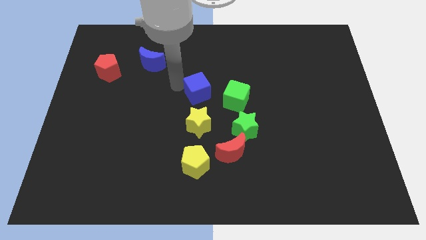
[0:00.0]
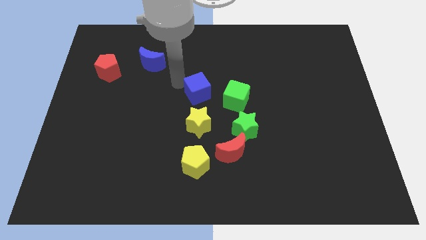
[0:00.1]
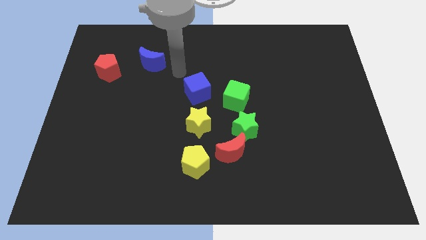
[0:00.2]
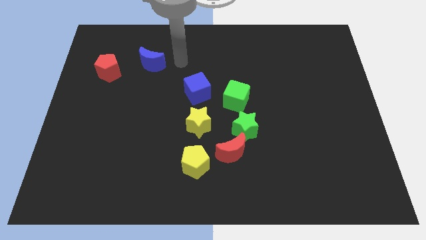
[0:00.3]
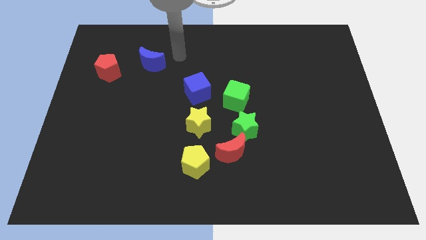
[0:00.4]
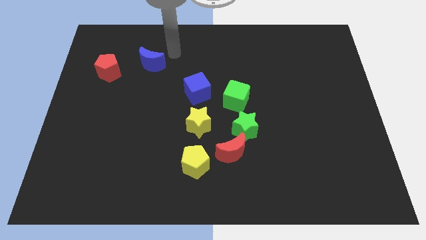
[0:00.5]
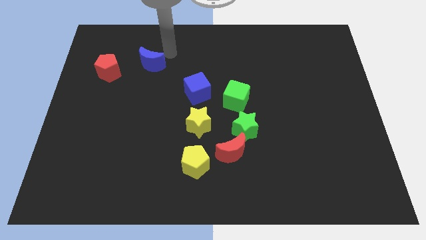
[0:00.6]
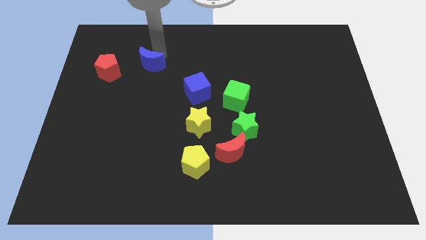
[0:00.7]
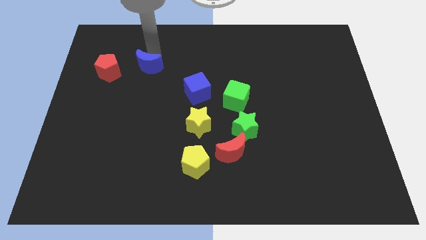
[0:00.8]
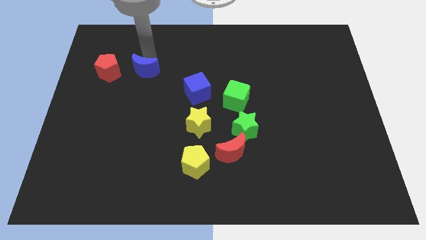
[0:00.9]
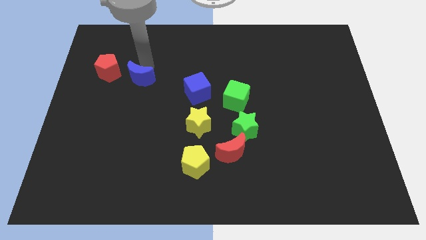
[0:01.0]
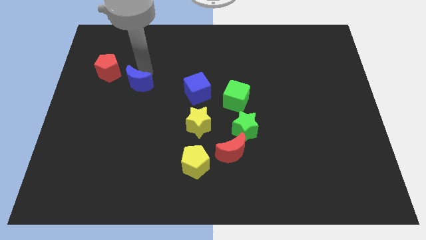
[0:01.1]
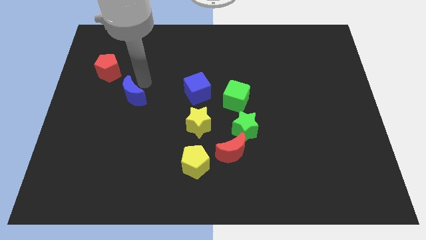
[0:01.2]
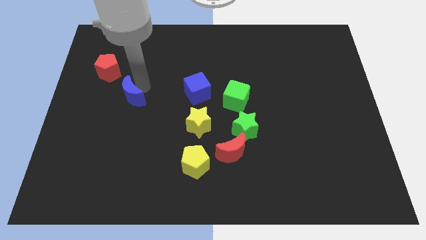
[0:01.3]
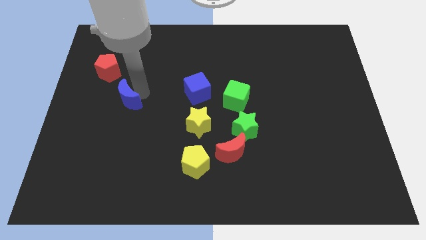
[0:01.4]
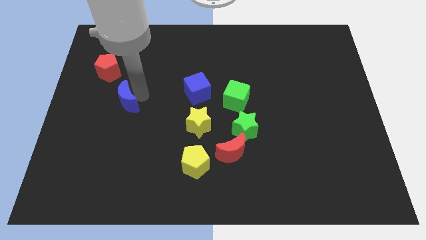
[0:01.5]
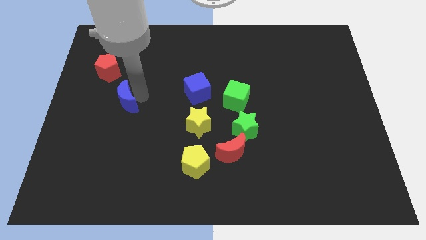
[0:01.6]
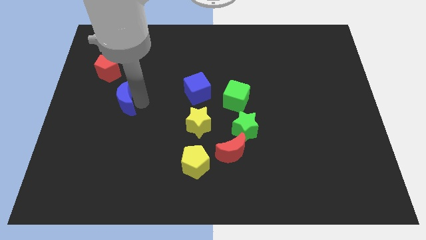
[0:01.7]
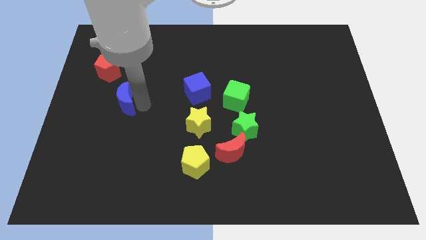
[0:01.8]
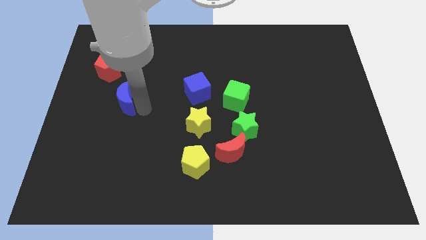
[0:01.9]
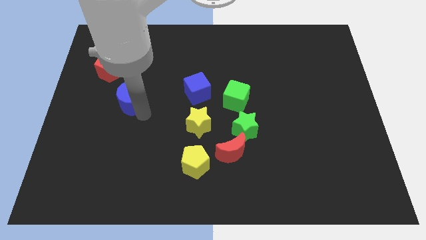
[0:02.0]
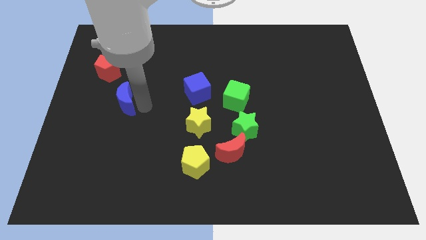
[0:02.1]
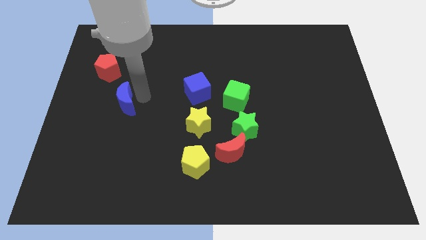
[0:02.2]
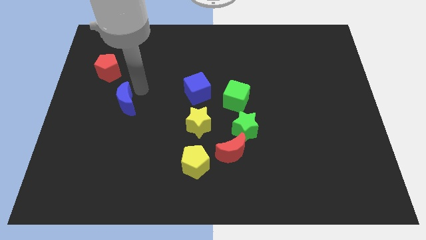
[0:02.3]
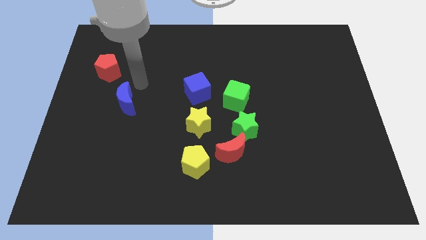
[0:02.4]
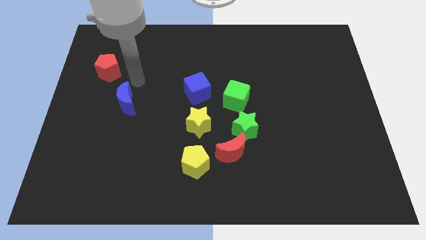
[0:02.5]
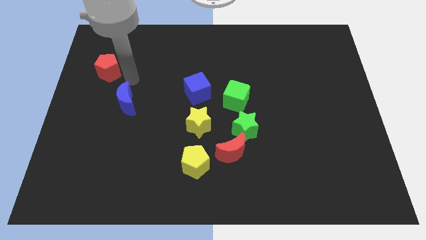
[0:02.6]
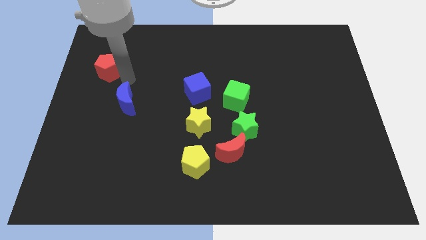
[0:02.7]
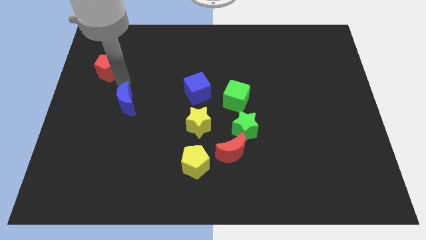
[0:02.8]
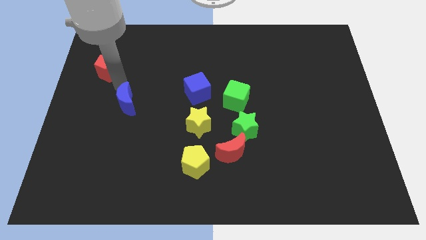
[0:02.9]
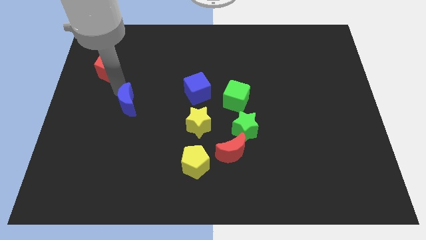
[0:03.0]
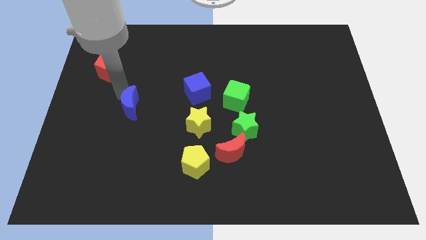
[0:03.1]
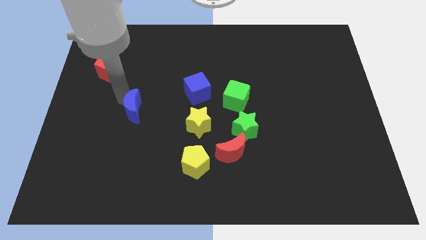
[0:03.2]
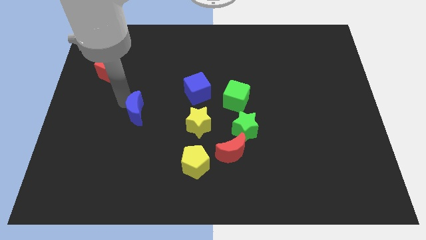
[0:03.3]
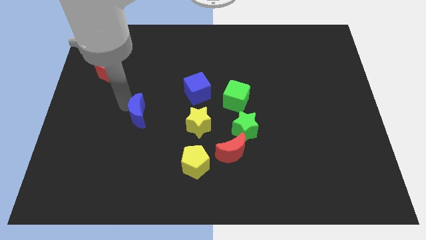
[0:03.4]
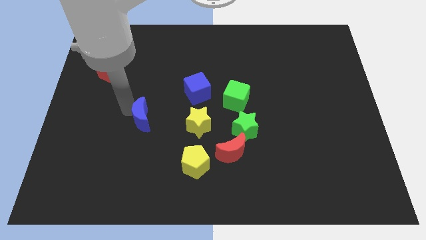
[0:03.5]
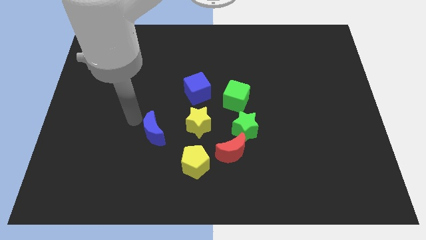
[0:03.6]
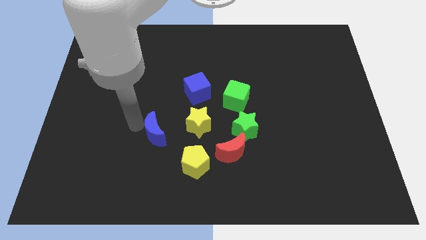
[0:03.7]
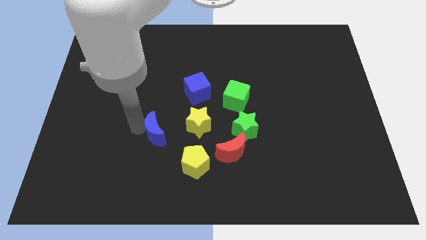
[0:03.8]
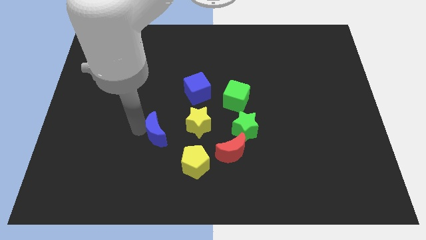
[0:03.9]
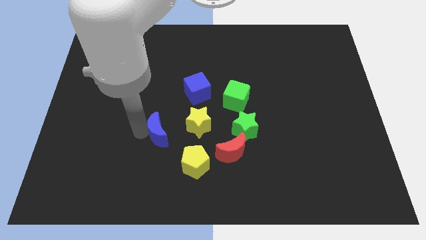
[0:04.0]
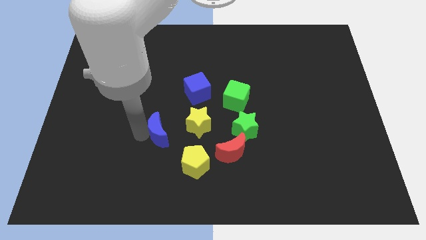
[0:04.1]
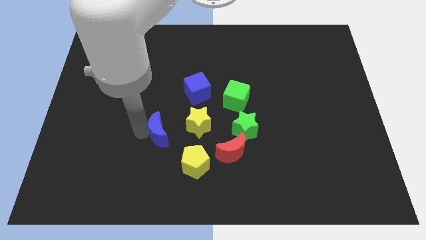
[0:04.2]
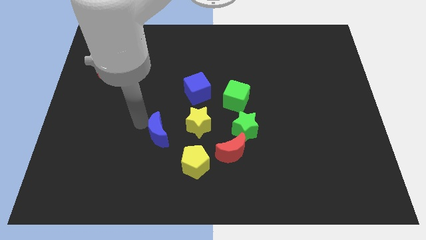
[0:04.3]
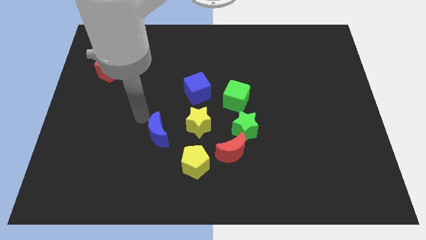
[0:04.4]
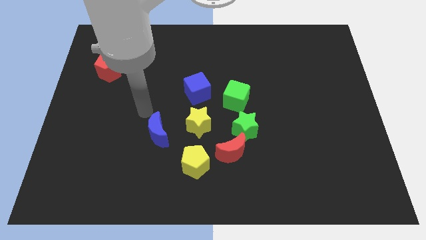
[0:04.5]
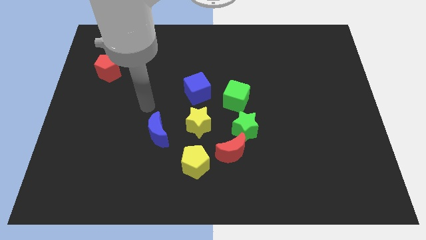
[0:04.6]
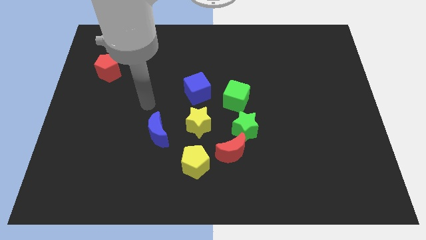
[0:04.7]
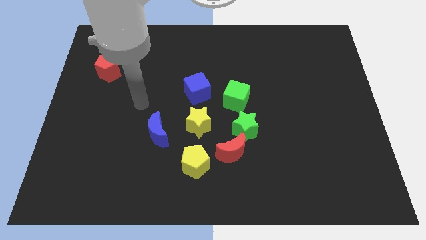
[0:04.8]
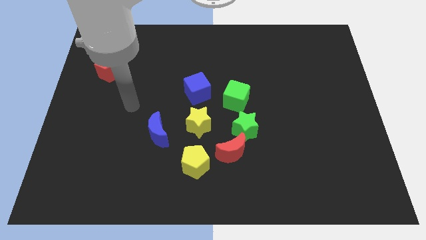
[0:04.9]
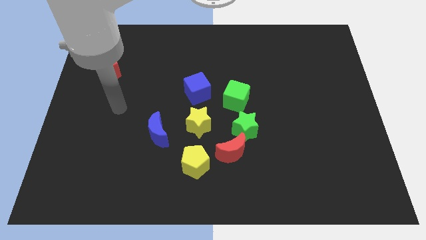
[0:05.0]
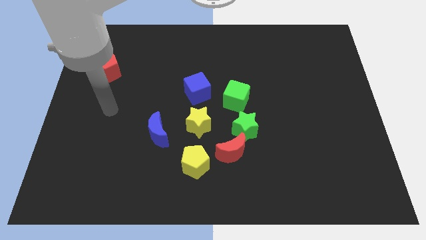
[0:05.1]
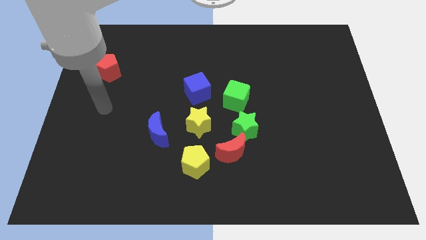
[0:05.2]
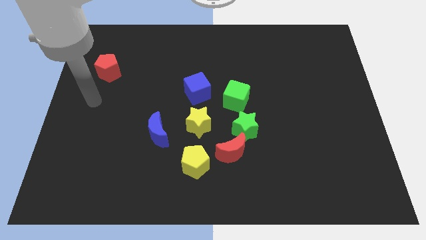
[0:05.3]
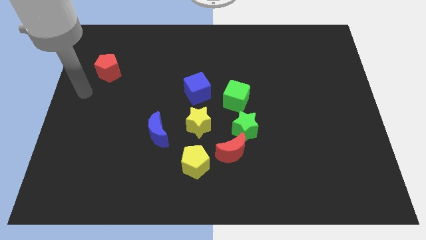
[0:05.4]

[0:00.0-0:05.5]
place the blue moon left to the yellow star

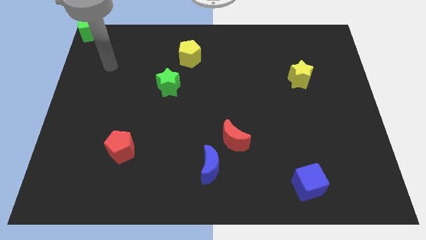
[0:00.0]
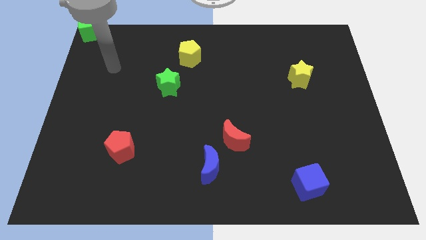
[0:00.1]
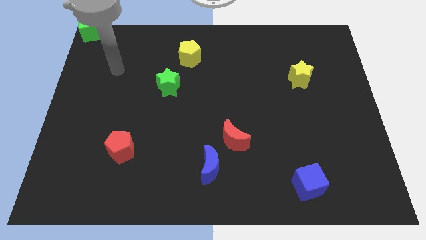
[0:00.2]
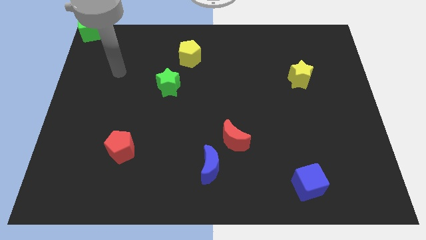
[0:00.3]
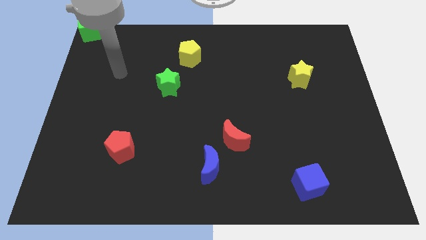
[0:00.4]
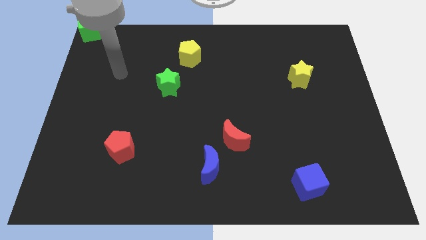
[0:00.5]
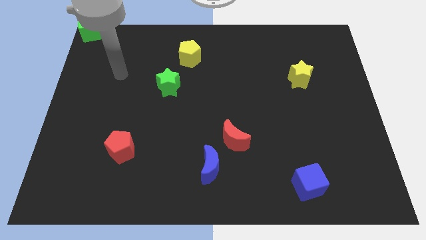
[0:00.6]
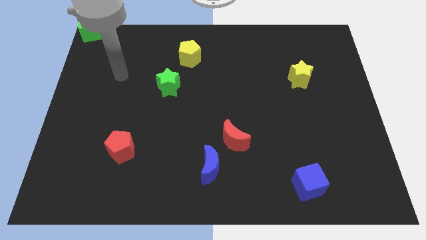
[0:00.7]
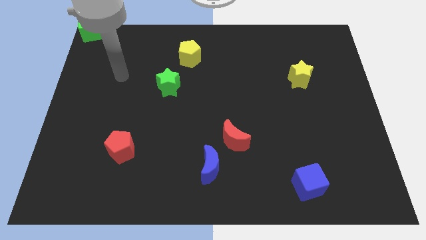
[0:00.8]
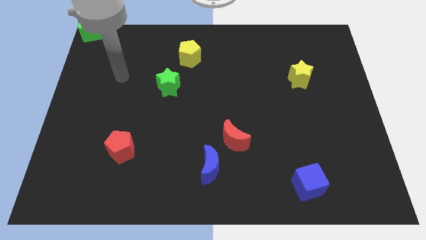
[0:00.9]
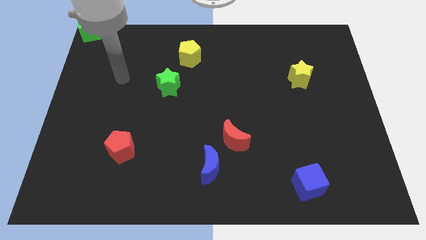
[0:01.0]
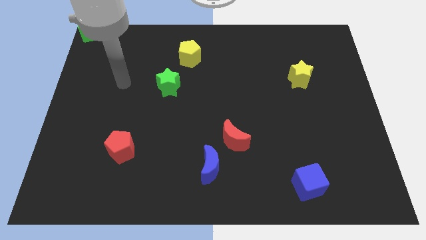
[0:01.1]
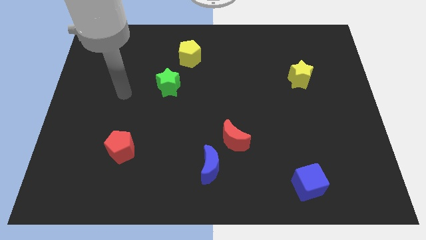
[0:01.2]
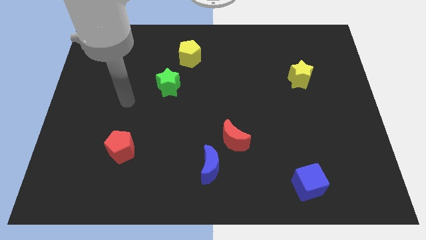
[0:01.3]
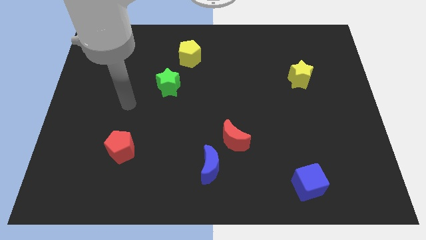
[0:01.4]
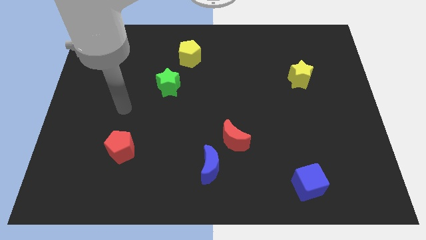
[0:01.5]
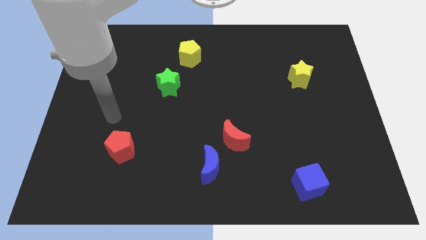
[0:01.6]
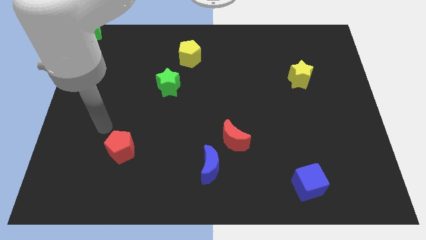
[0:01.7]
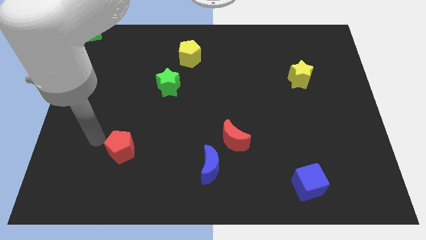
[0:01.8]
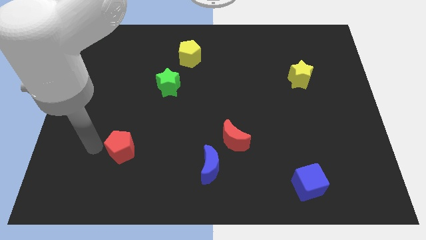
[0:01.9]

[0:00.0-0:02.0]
point your arm at the left side of the red pentagon

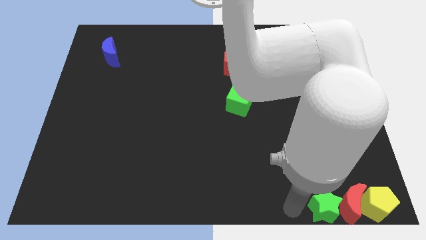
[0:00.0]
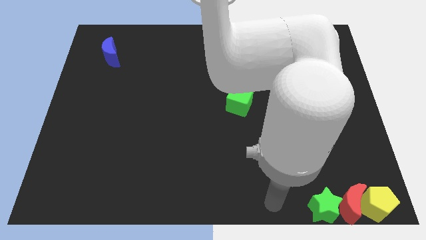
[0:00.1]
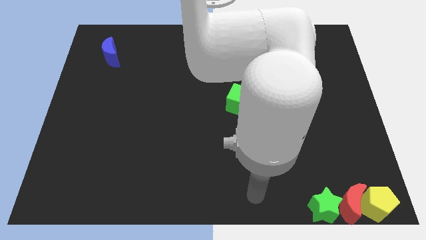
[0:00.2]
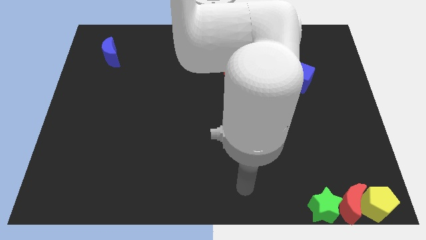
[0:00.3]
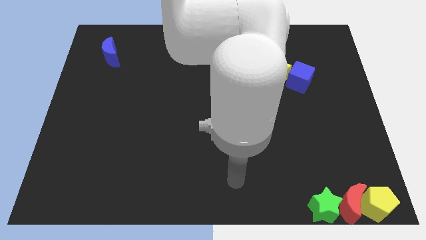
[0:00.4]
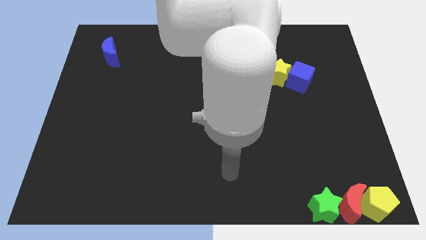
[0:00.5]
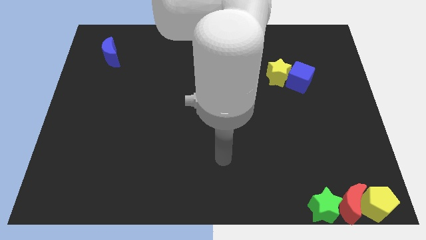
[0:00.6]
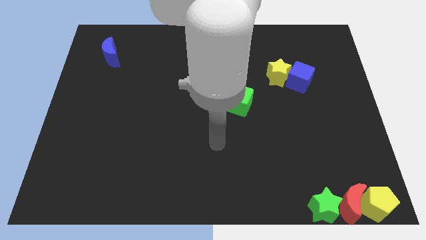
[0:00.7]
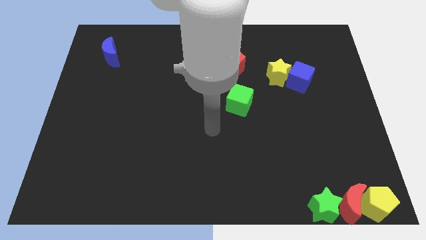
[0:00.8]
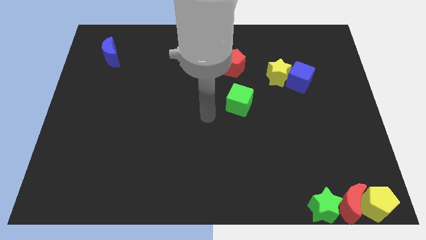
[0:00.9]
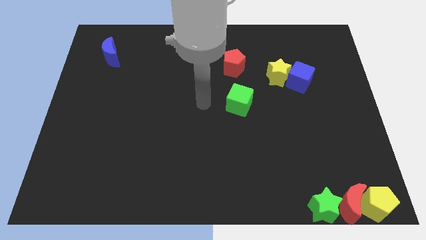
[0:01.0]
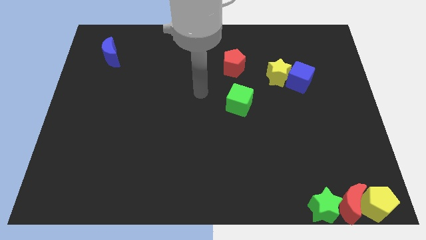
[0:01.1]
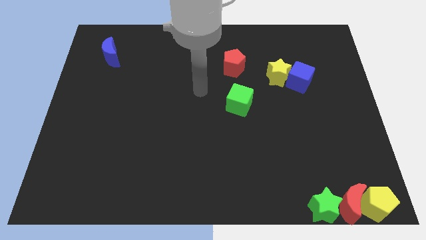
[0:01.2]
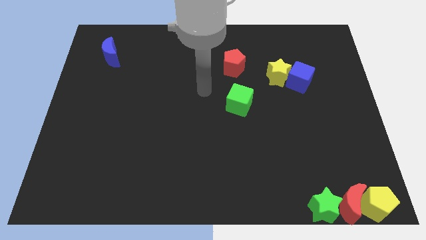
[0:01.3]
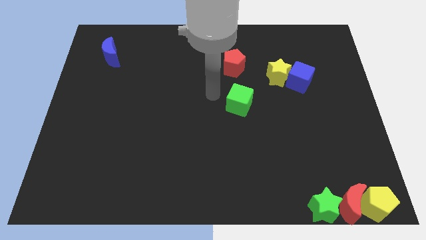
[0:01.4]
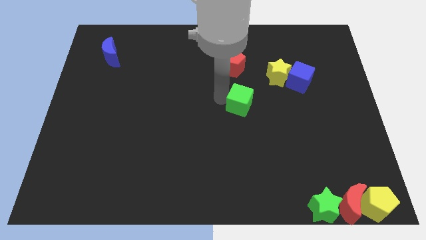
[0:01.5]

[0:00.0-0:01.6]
point the arm to the left of the green cube
